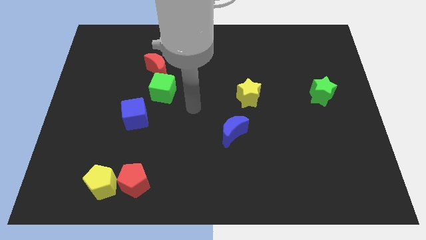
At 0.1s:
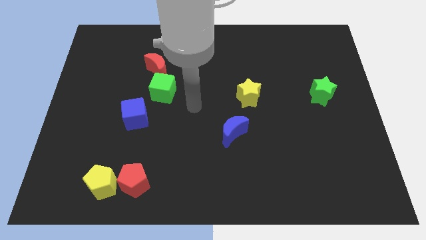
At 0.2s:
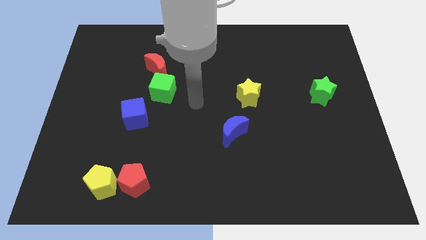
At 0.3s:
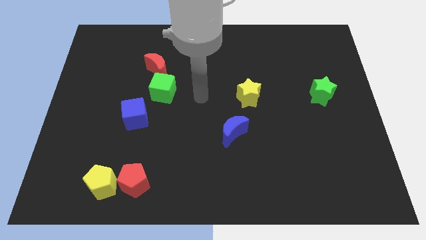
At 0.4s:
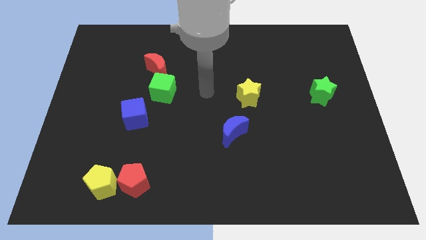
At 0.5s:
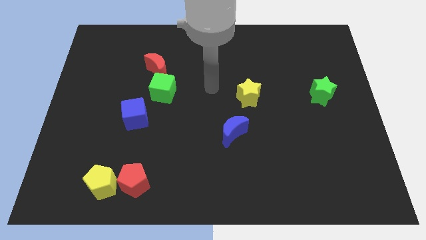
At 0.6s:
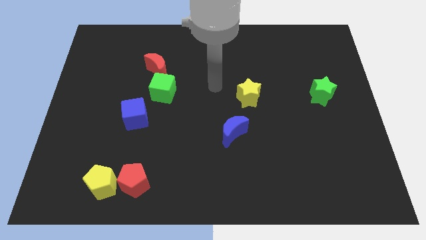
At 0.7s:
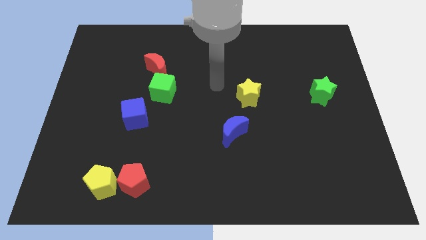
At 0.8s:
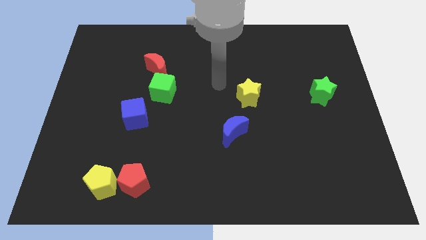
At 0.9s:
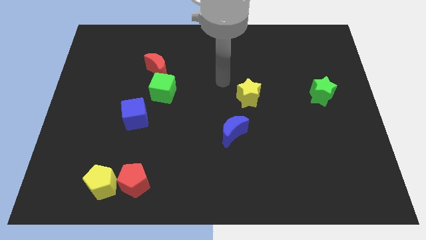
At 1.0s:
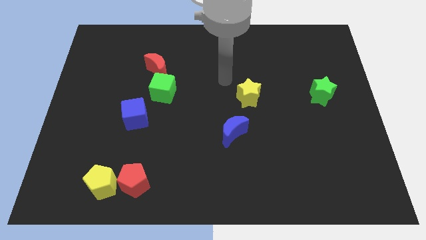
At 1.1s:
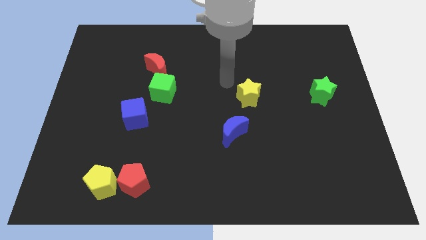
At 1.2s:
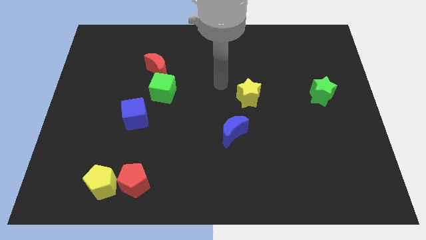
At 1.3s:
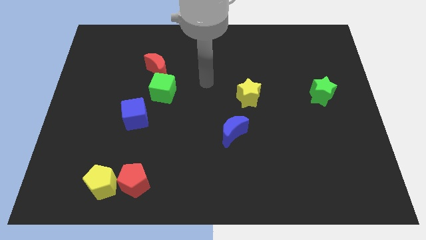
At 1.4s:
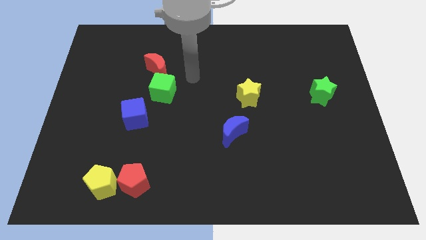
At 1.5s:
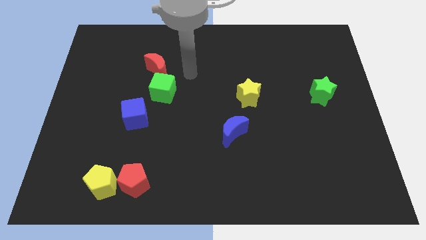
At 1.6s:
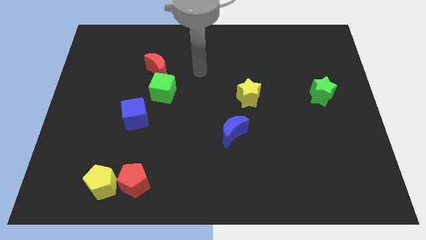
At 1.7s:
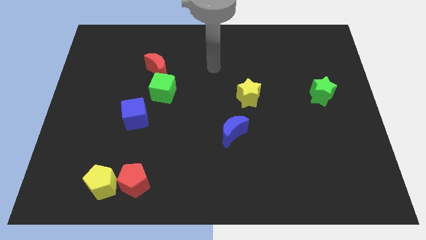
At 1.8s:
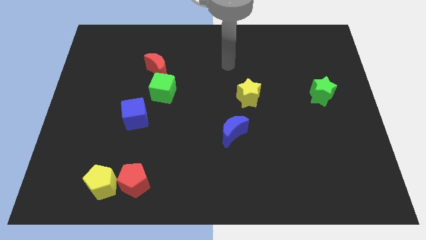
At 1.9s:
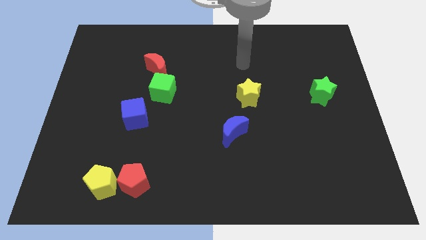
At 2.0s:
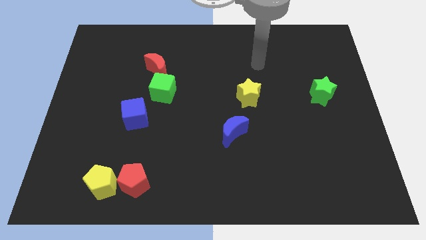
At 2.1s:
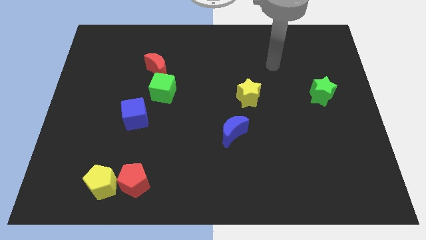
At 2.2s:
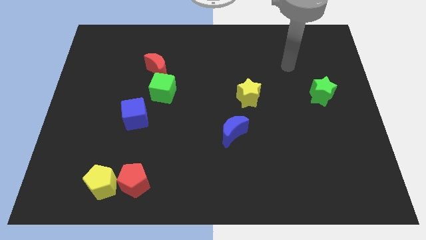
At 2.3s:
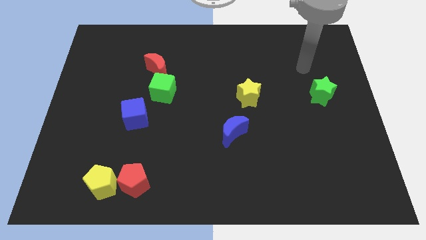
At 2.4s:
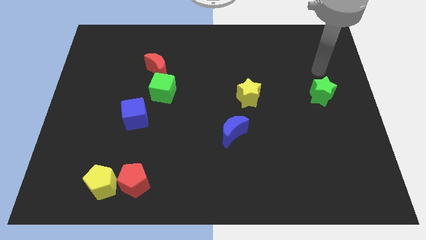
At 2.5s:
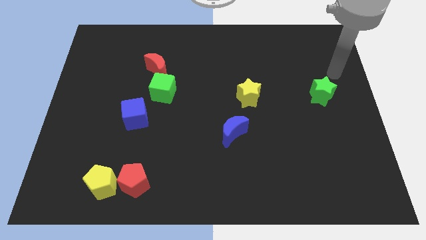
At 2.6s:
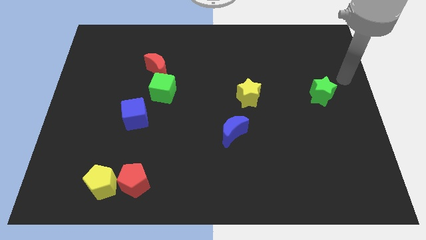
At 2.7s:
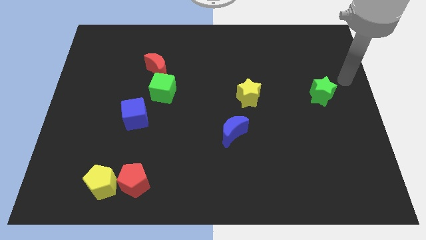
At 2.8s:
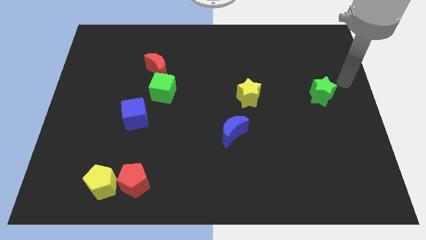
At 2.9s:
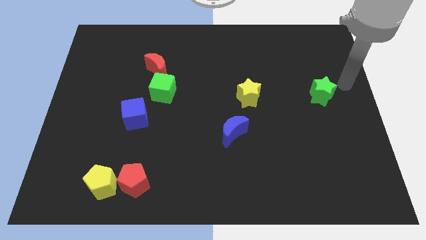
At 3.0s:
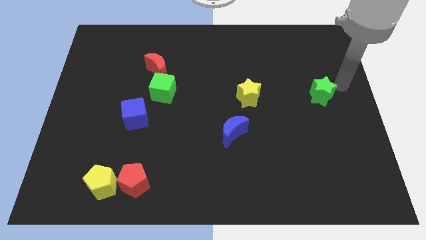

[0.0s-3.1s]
place your arm to the right side of green star

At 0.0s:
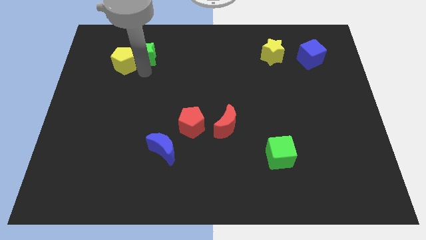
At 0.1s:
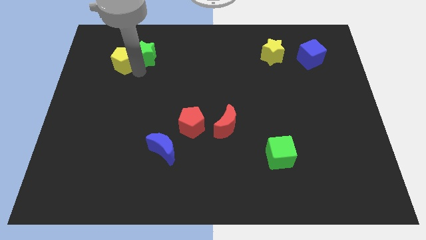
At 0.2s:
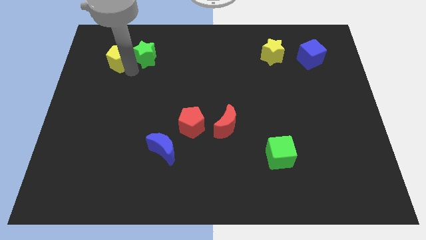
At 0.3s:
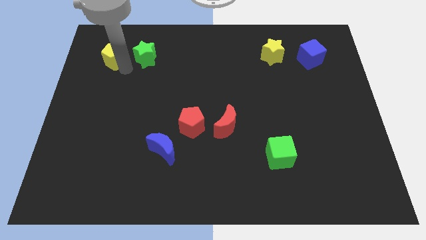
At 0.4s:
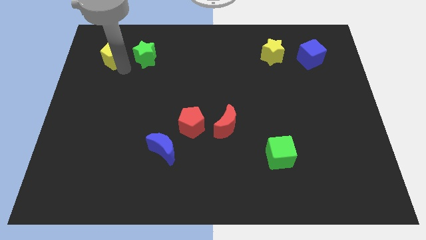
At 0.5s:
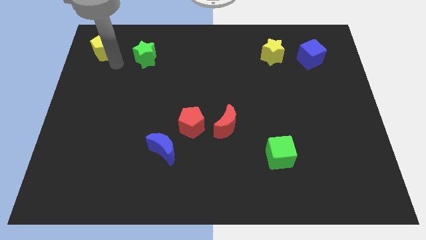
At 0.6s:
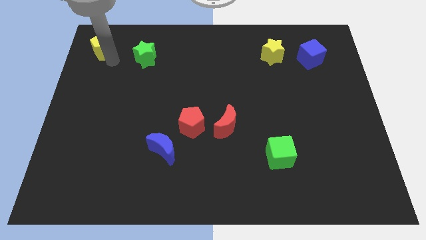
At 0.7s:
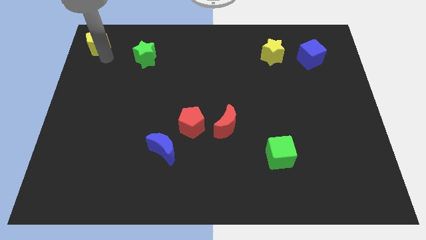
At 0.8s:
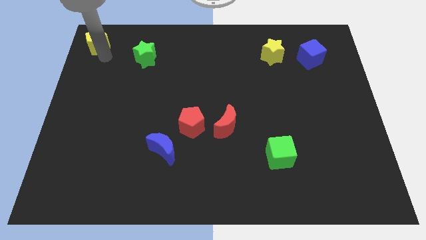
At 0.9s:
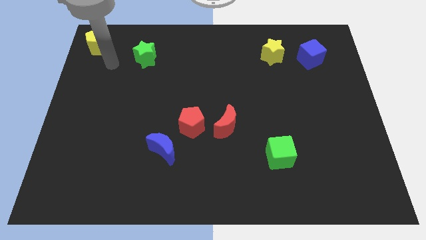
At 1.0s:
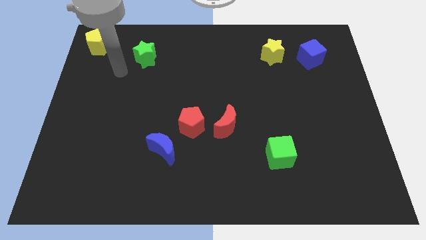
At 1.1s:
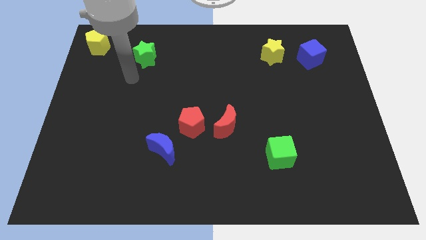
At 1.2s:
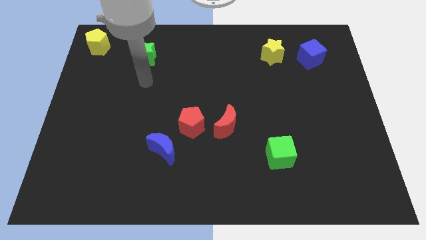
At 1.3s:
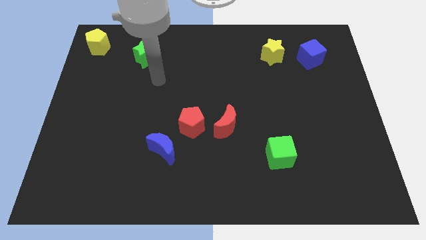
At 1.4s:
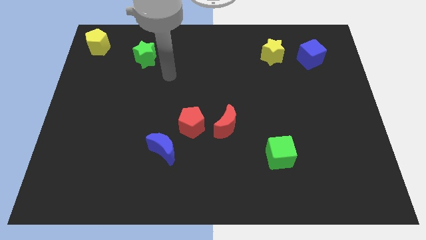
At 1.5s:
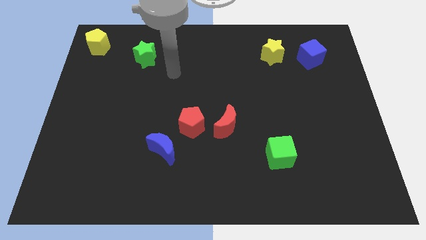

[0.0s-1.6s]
move the yellow pentagon to the top left corner of the board

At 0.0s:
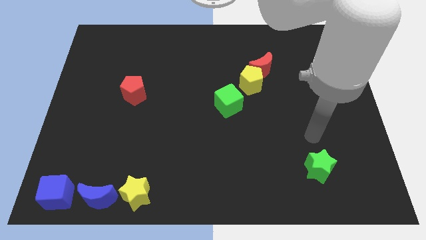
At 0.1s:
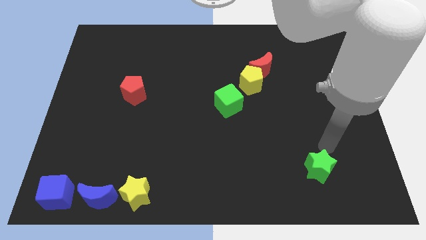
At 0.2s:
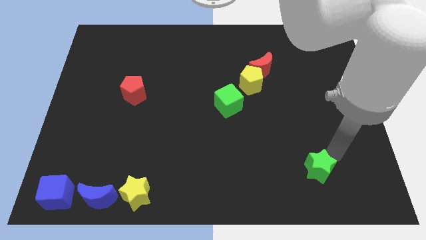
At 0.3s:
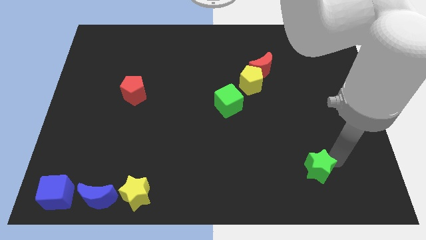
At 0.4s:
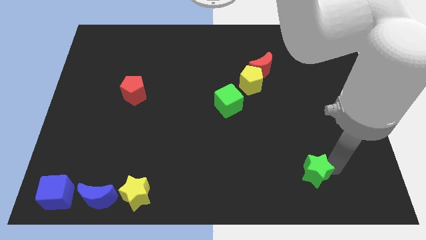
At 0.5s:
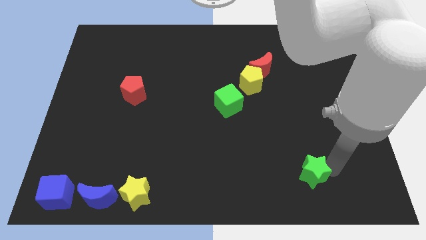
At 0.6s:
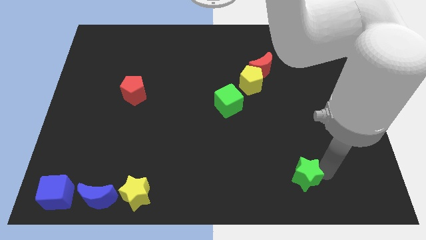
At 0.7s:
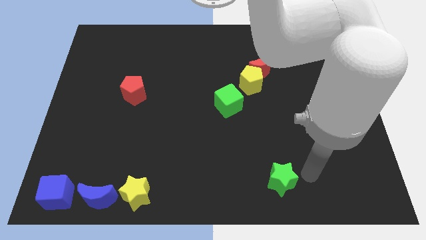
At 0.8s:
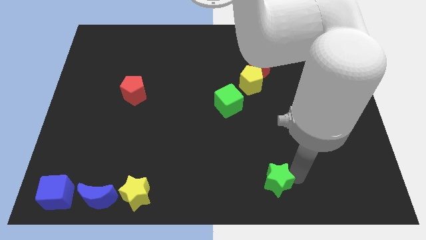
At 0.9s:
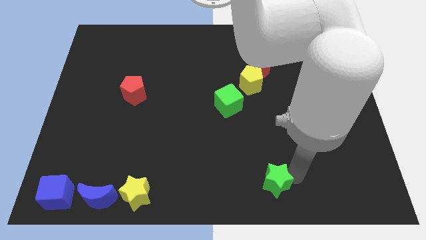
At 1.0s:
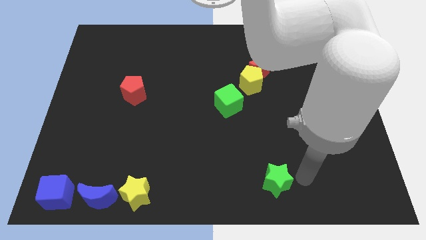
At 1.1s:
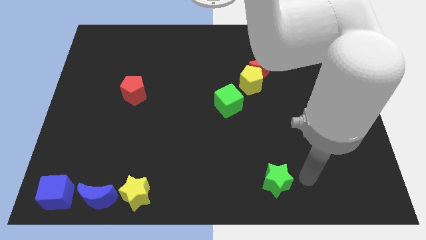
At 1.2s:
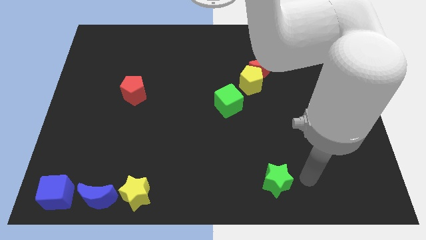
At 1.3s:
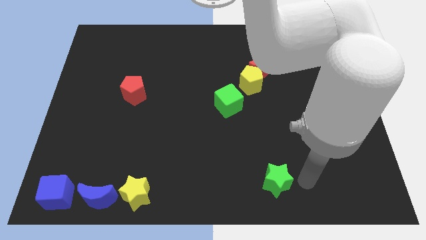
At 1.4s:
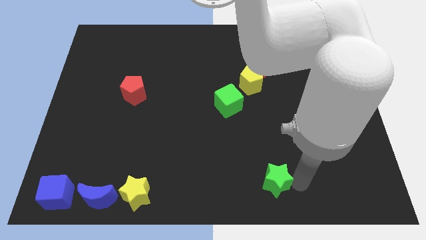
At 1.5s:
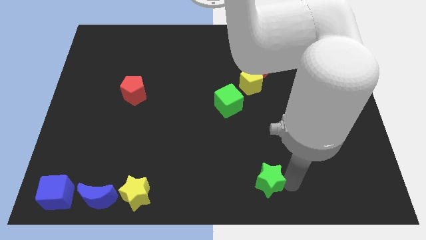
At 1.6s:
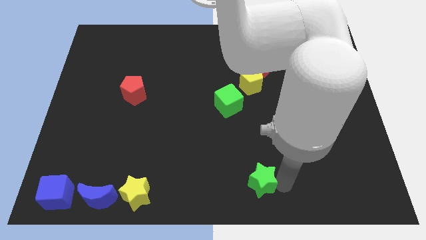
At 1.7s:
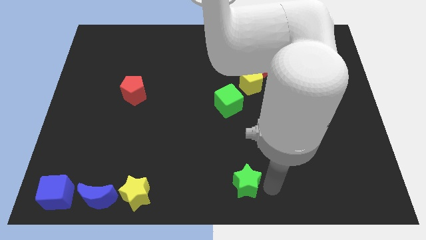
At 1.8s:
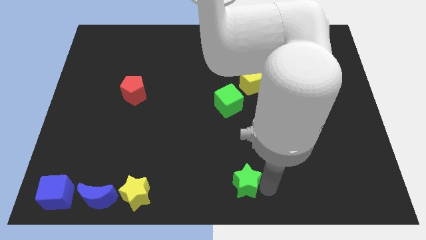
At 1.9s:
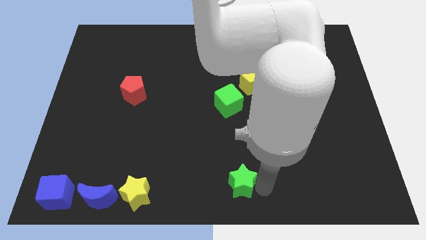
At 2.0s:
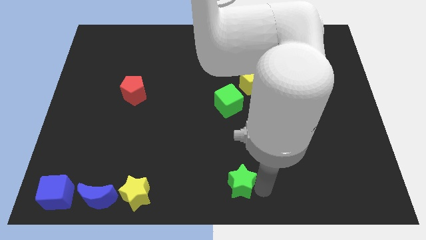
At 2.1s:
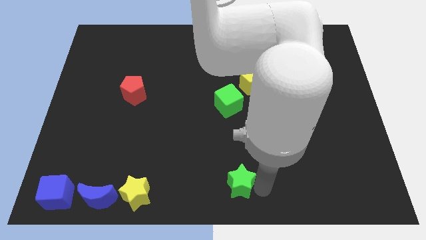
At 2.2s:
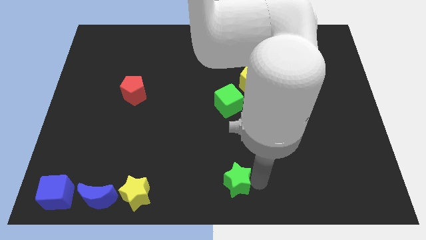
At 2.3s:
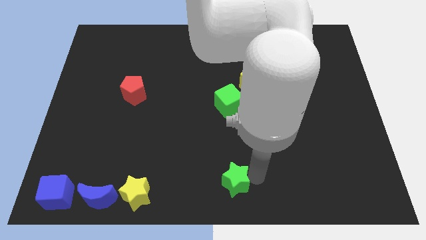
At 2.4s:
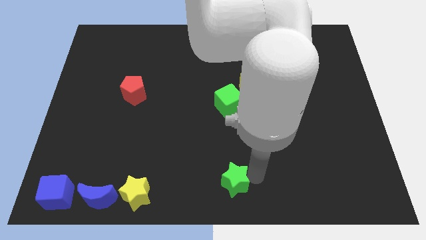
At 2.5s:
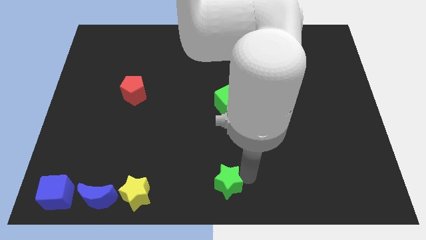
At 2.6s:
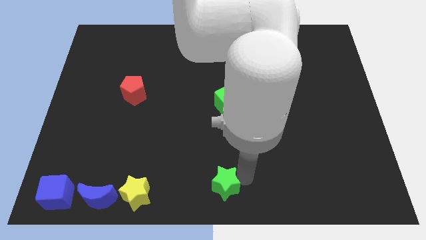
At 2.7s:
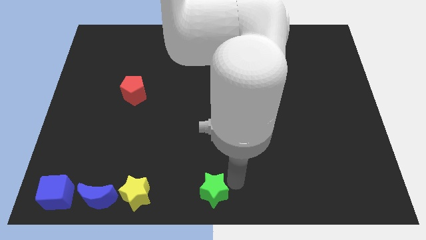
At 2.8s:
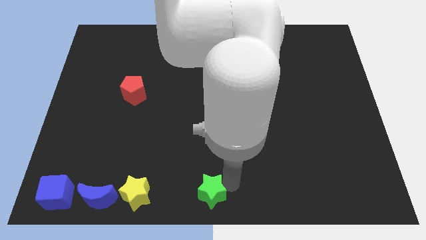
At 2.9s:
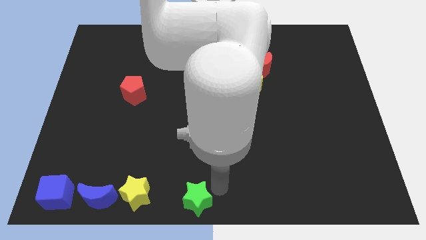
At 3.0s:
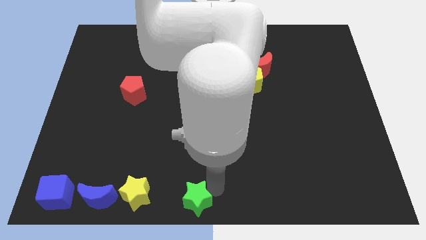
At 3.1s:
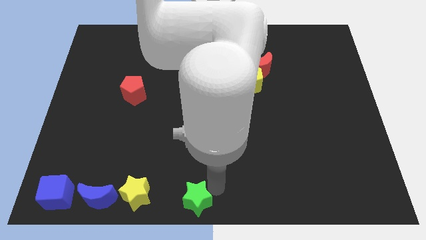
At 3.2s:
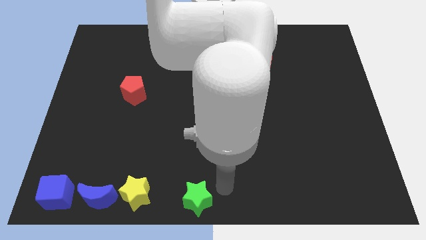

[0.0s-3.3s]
push the green star at the bottom center

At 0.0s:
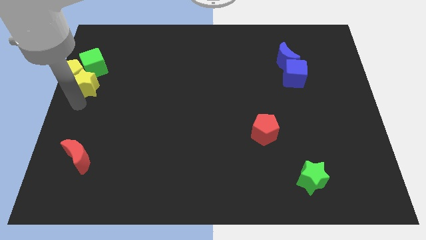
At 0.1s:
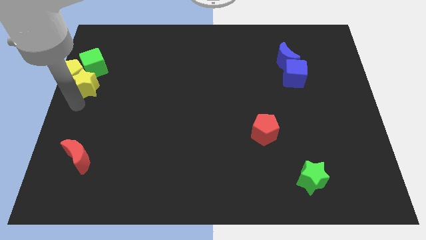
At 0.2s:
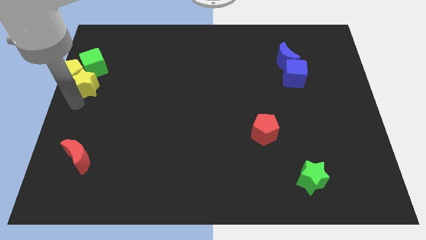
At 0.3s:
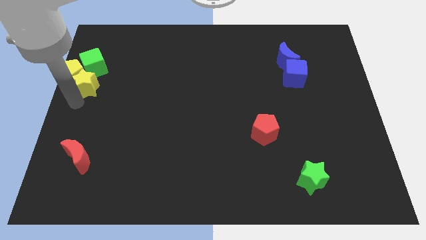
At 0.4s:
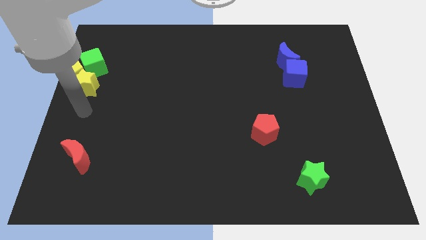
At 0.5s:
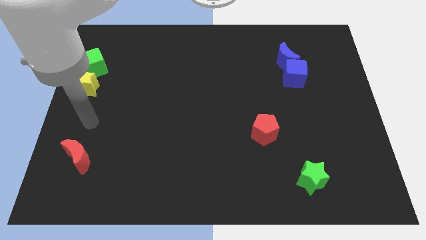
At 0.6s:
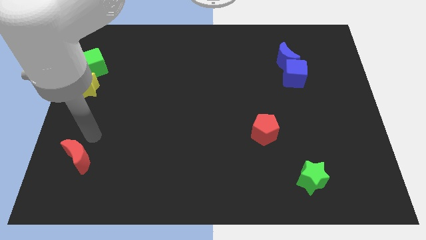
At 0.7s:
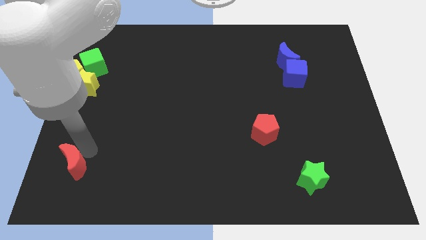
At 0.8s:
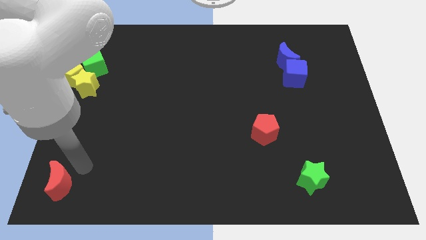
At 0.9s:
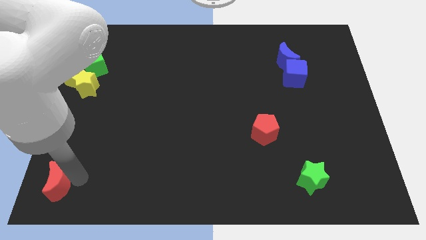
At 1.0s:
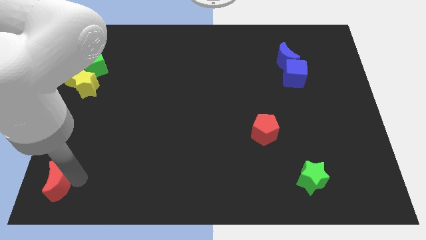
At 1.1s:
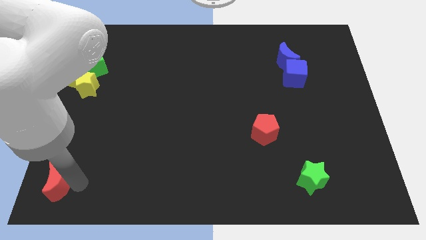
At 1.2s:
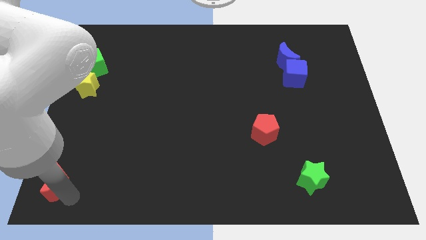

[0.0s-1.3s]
slide the red moon slightly to the down
